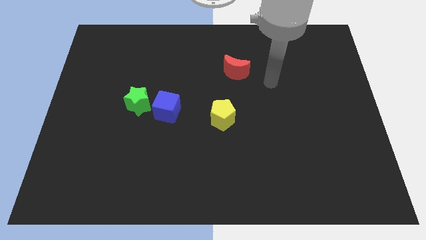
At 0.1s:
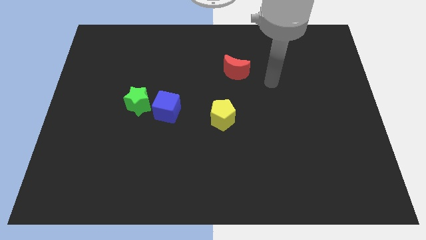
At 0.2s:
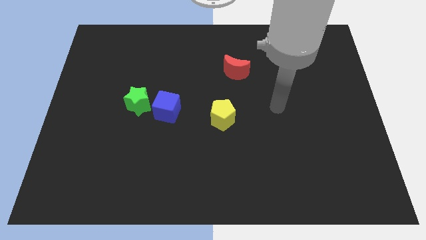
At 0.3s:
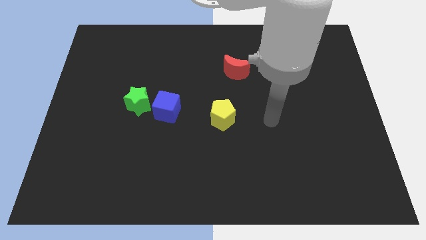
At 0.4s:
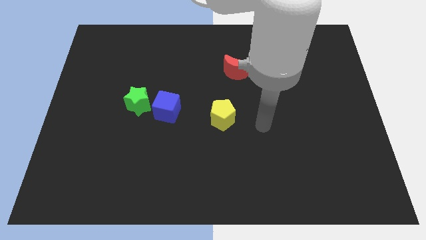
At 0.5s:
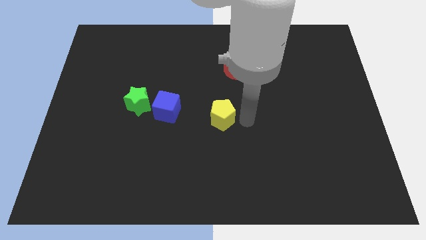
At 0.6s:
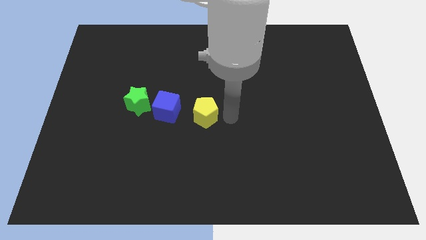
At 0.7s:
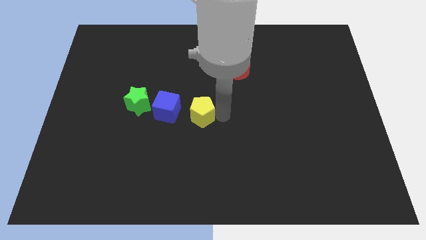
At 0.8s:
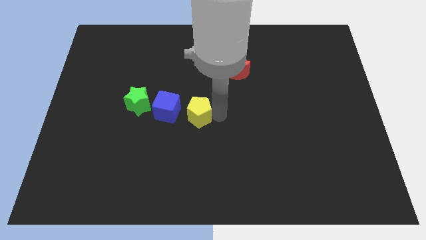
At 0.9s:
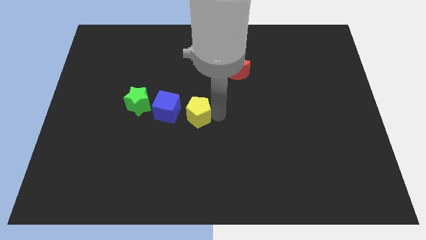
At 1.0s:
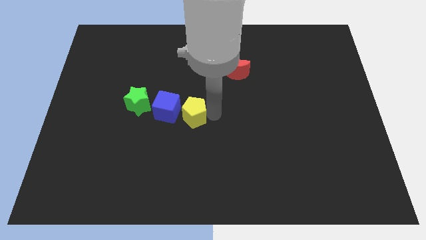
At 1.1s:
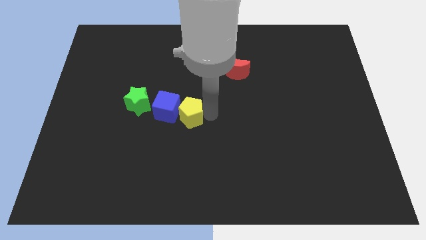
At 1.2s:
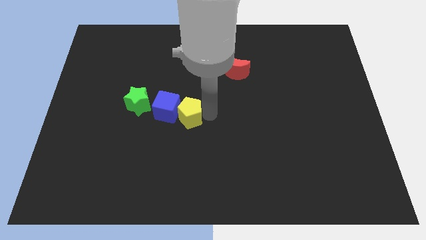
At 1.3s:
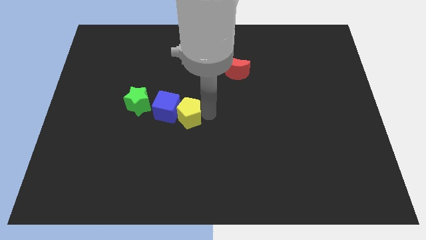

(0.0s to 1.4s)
push the yellow block next to the blue cube

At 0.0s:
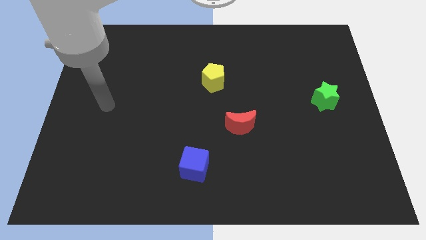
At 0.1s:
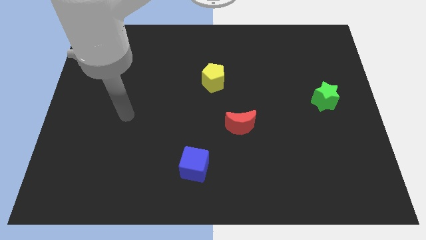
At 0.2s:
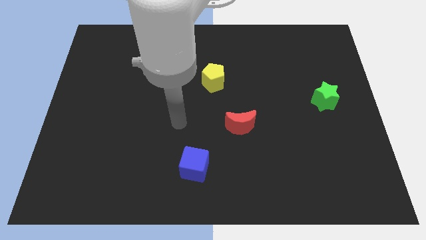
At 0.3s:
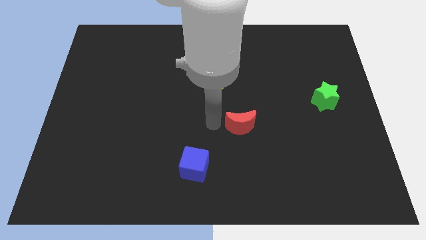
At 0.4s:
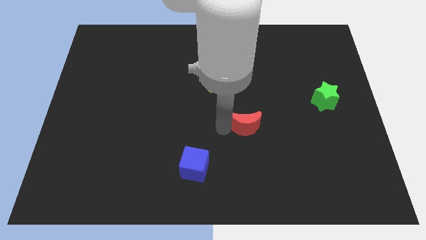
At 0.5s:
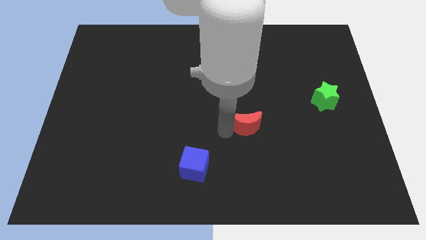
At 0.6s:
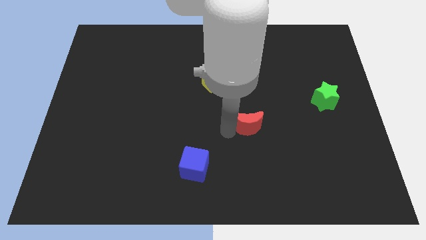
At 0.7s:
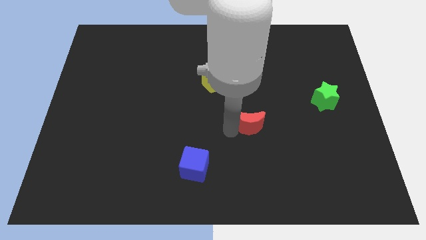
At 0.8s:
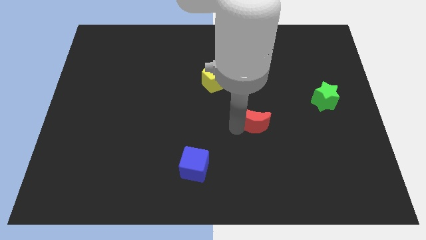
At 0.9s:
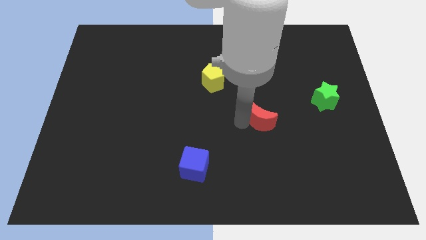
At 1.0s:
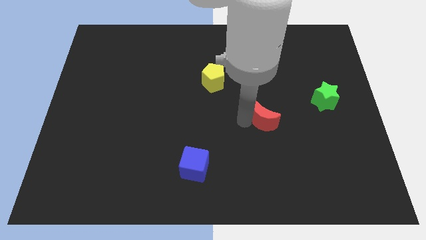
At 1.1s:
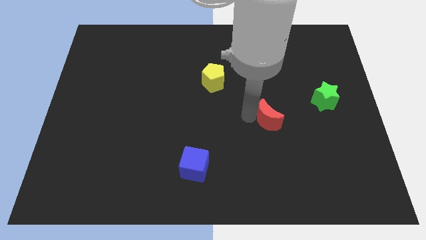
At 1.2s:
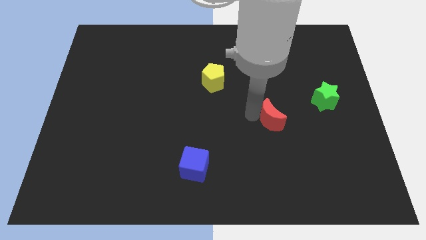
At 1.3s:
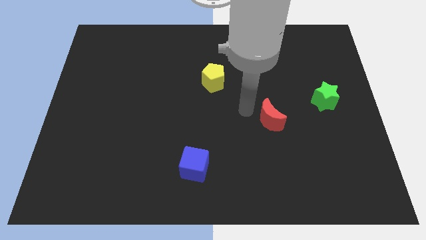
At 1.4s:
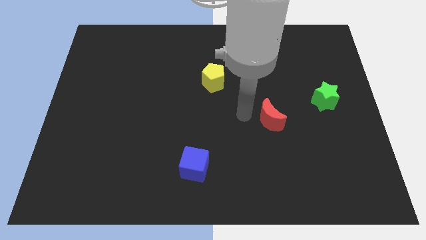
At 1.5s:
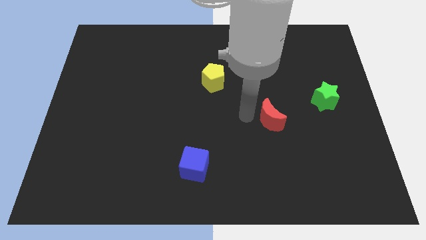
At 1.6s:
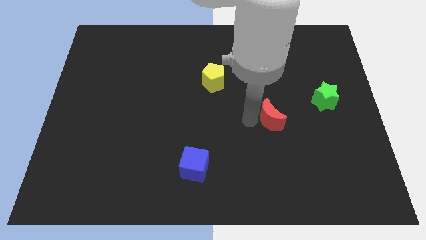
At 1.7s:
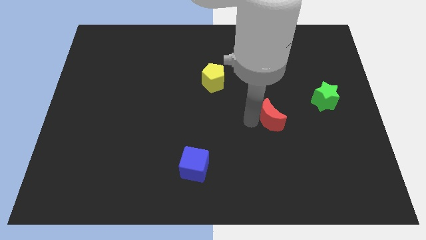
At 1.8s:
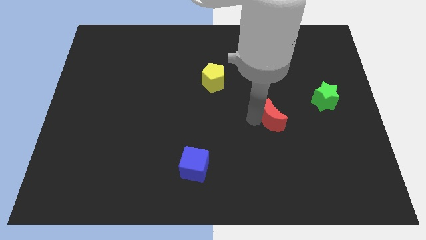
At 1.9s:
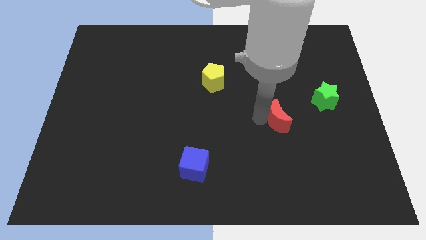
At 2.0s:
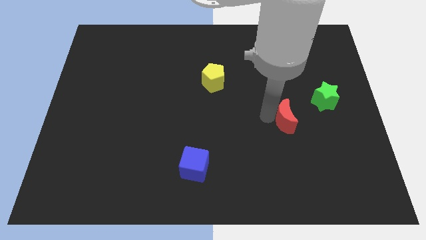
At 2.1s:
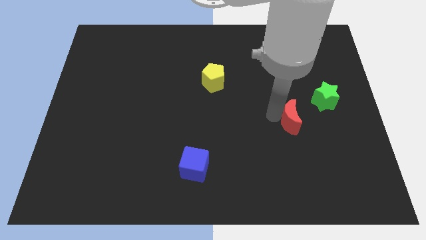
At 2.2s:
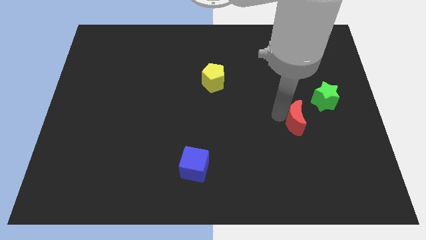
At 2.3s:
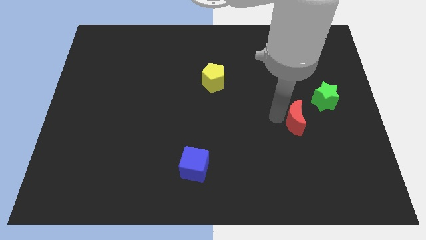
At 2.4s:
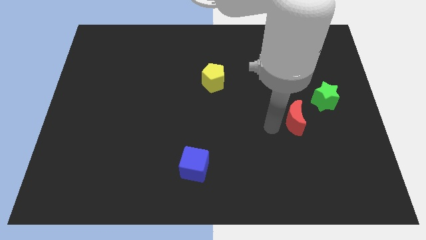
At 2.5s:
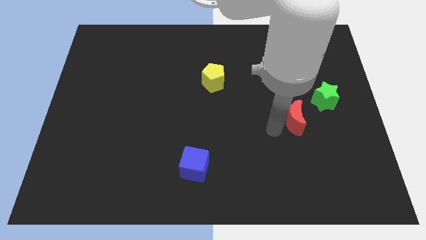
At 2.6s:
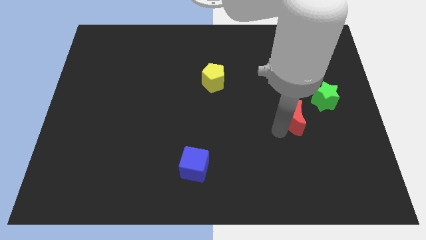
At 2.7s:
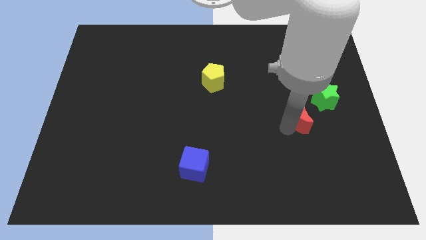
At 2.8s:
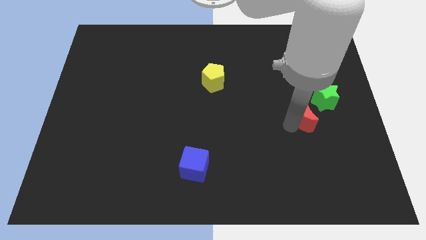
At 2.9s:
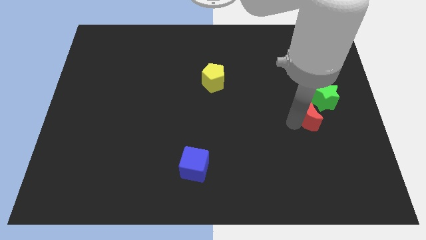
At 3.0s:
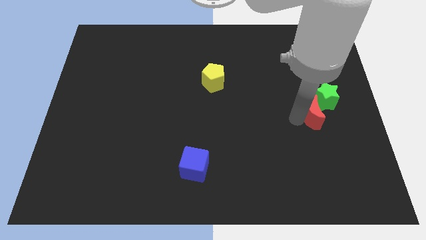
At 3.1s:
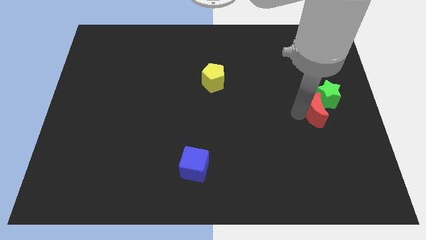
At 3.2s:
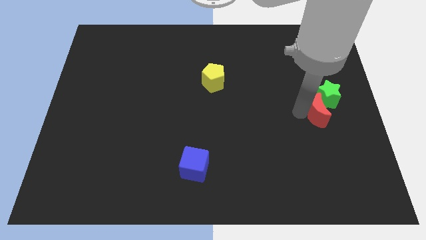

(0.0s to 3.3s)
slide the moon to the green star

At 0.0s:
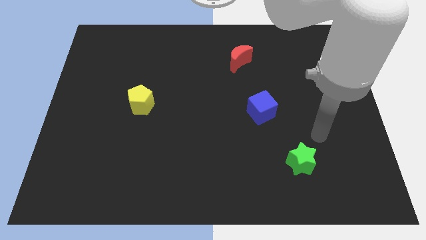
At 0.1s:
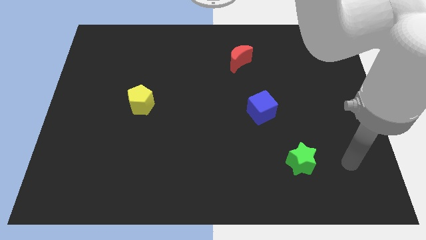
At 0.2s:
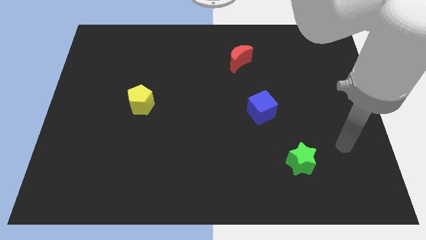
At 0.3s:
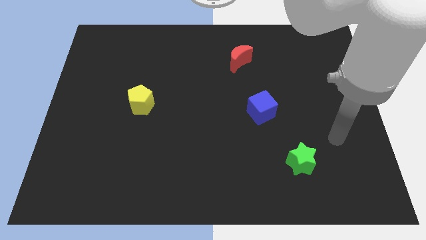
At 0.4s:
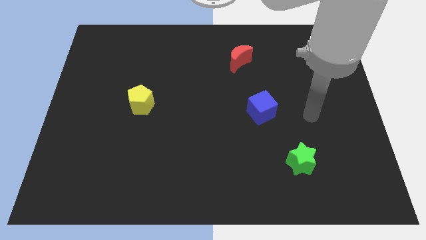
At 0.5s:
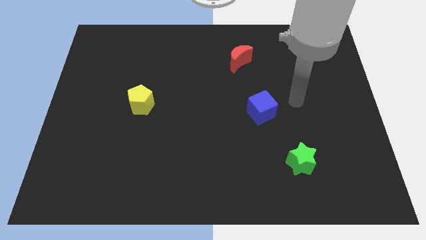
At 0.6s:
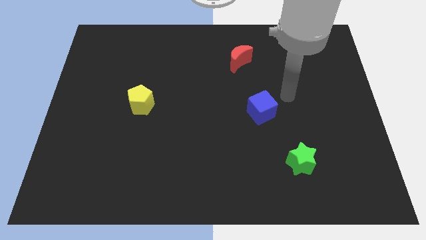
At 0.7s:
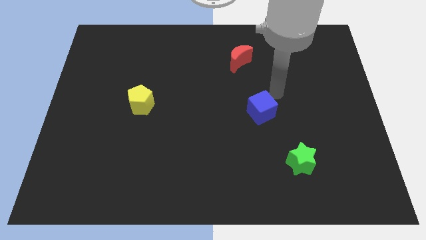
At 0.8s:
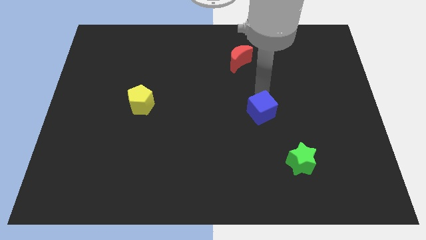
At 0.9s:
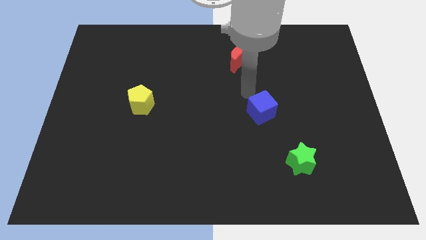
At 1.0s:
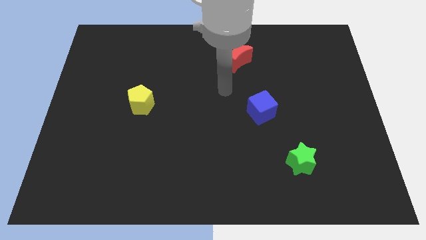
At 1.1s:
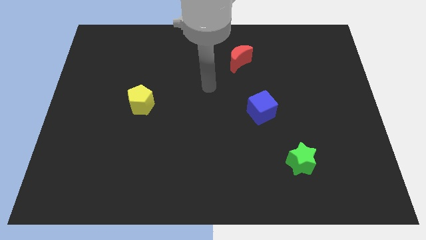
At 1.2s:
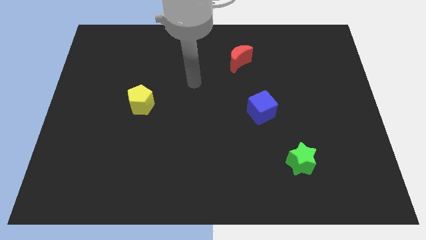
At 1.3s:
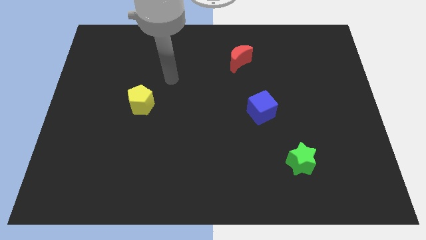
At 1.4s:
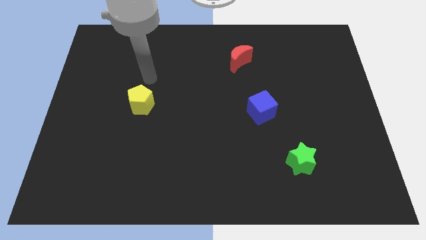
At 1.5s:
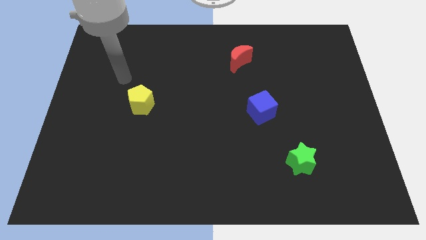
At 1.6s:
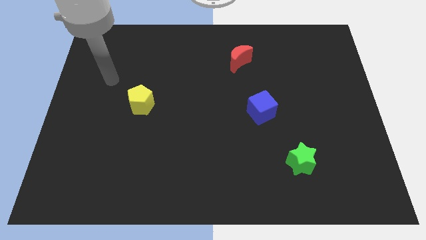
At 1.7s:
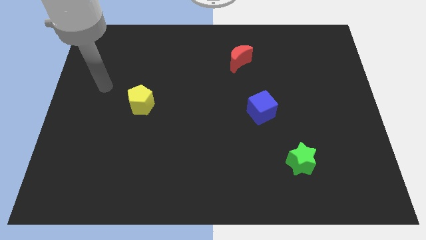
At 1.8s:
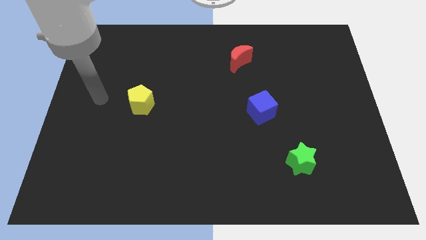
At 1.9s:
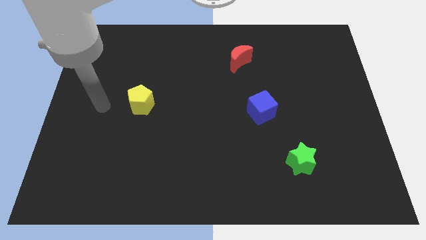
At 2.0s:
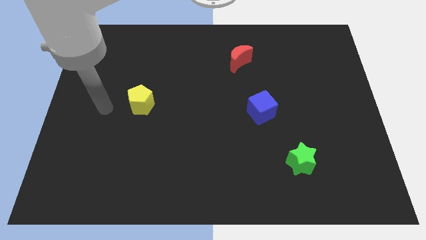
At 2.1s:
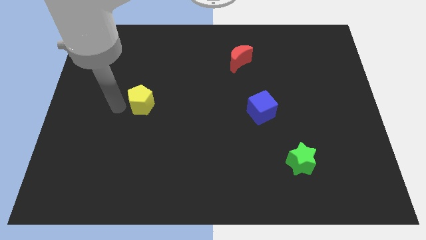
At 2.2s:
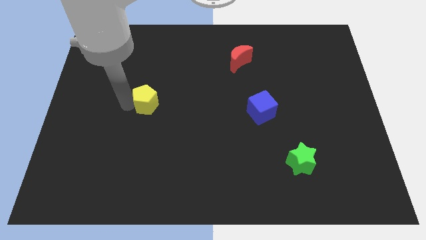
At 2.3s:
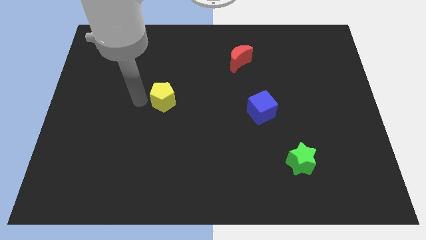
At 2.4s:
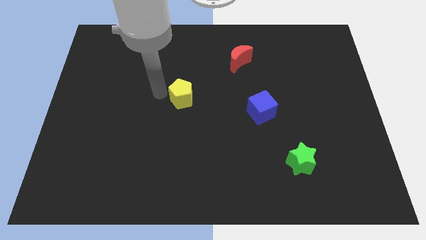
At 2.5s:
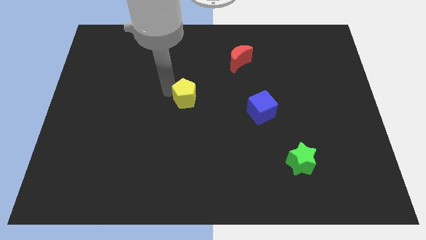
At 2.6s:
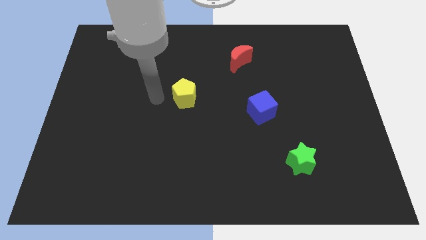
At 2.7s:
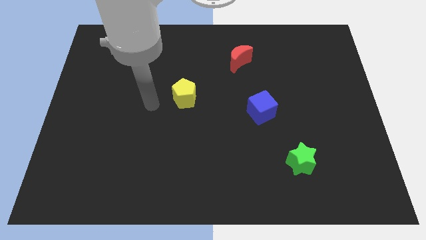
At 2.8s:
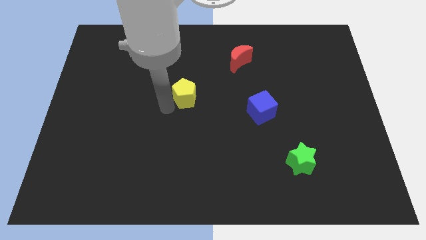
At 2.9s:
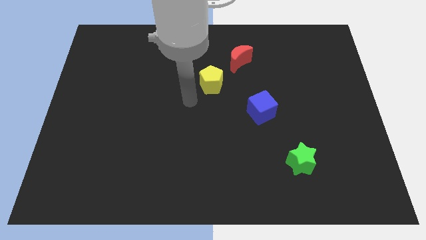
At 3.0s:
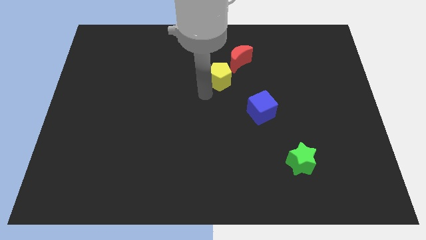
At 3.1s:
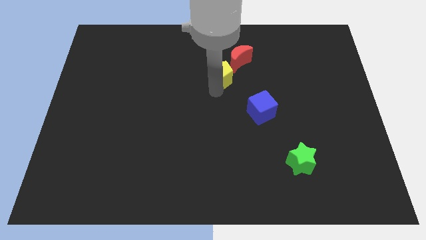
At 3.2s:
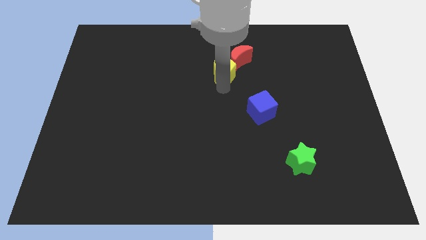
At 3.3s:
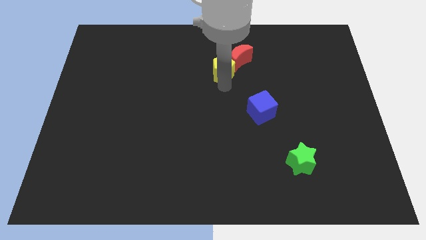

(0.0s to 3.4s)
move the yellow block next to the red block

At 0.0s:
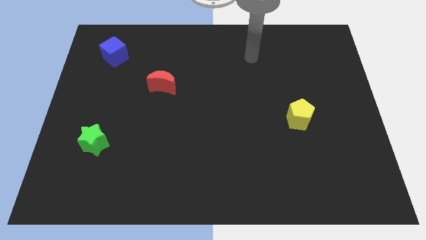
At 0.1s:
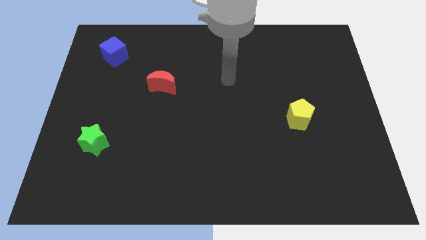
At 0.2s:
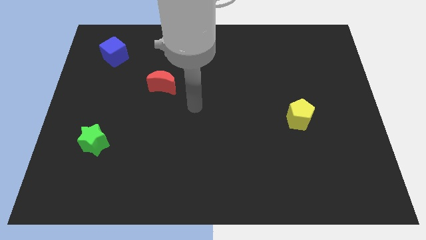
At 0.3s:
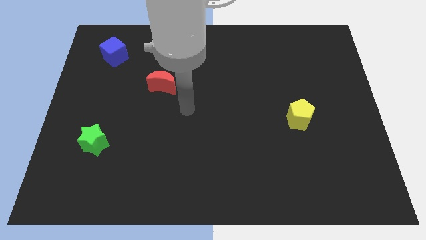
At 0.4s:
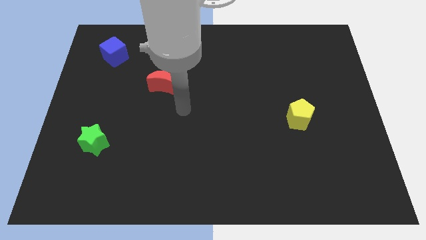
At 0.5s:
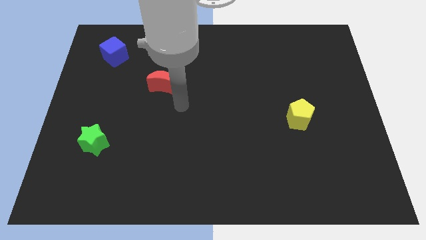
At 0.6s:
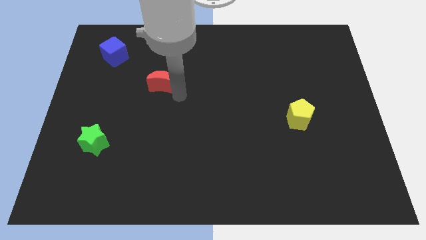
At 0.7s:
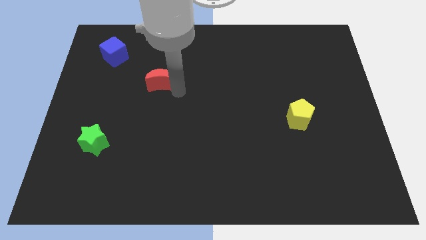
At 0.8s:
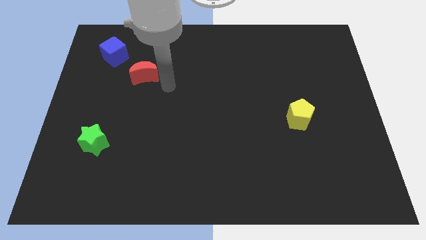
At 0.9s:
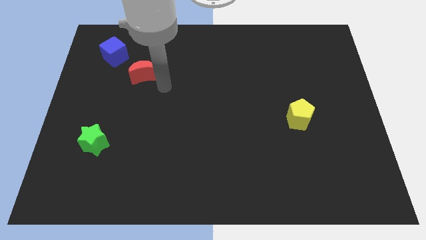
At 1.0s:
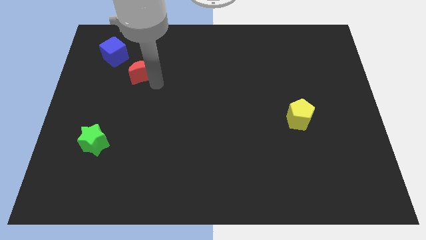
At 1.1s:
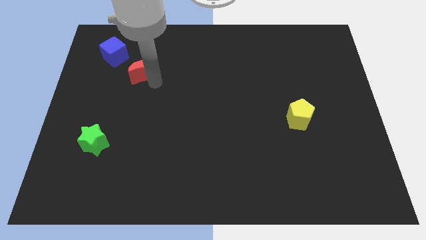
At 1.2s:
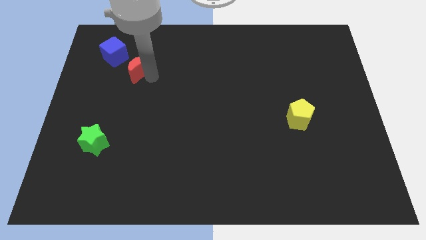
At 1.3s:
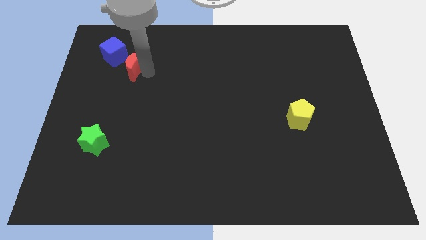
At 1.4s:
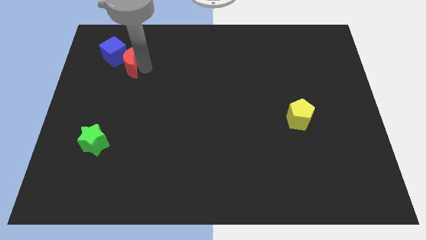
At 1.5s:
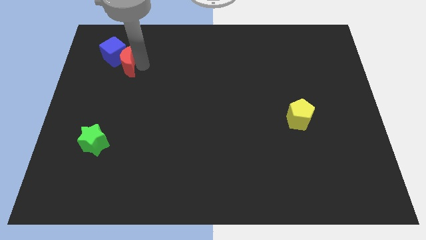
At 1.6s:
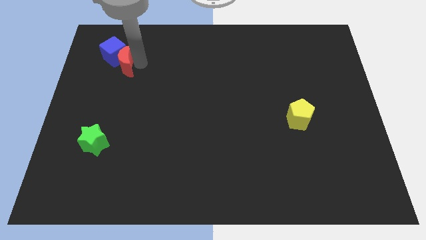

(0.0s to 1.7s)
move the red block next to the blue cube
